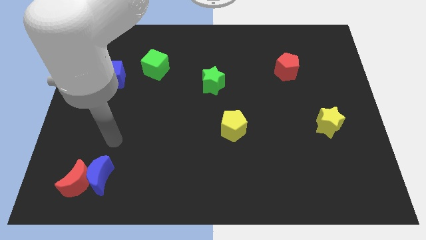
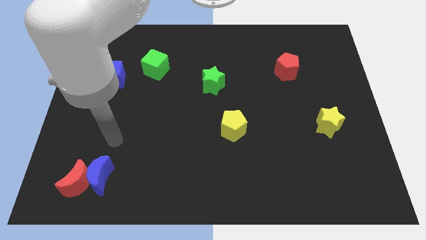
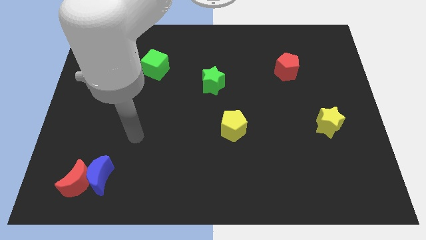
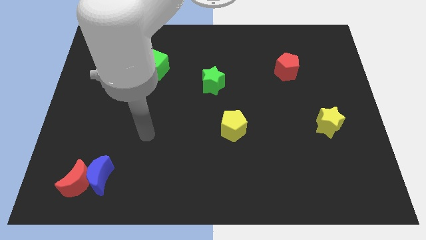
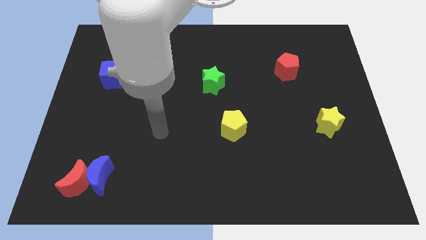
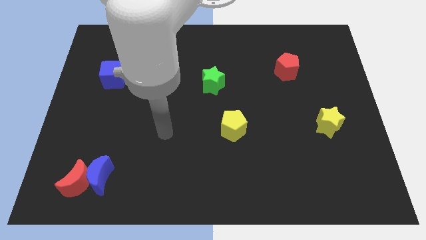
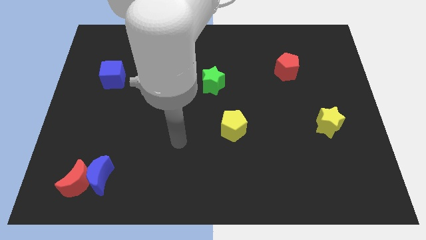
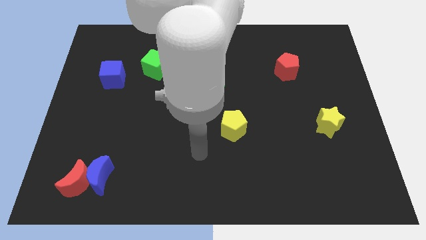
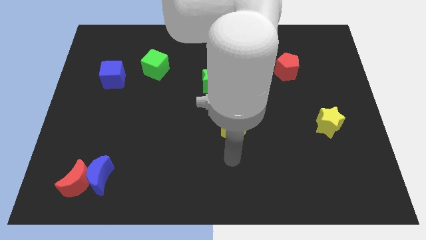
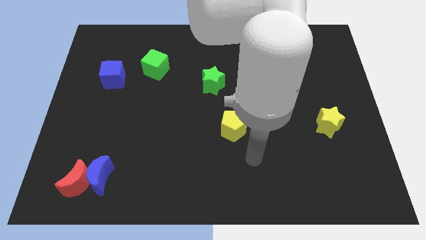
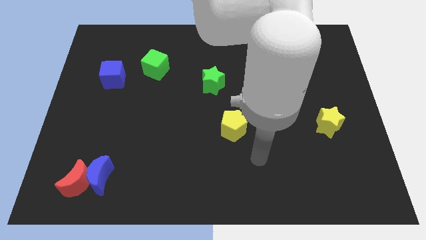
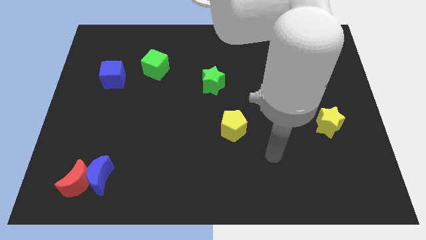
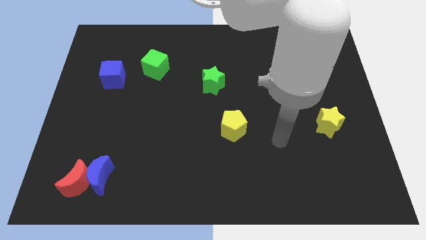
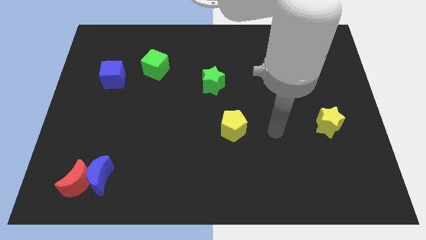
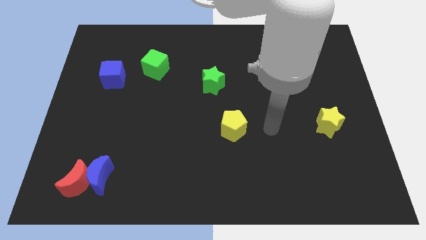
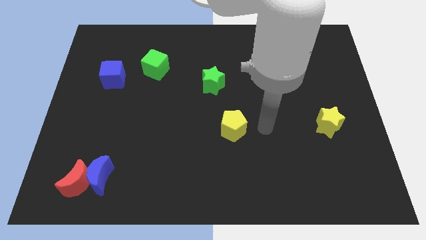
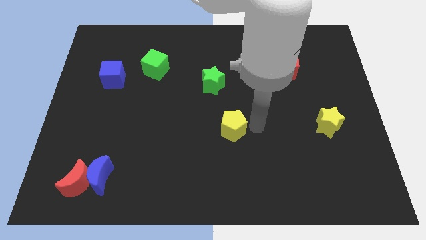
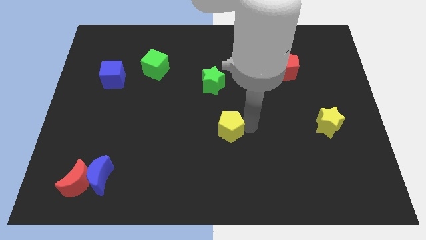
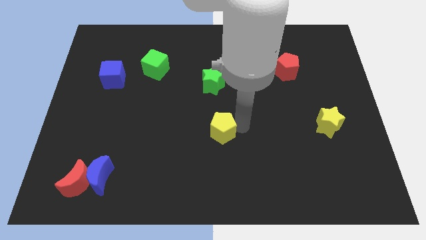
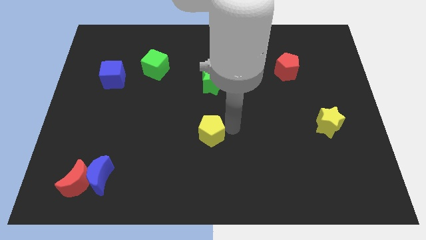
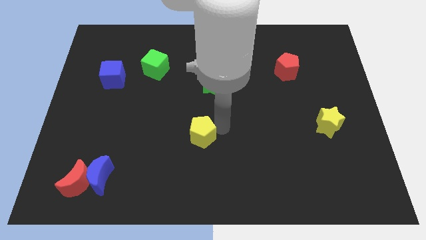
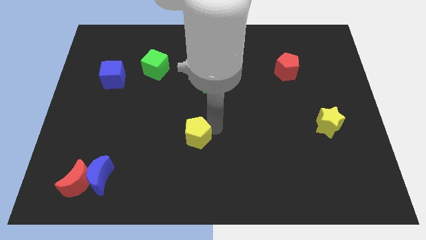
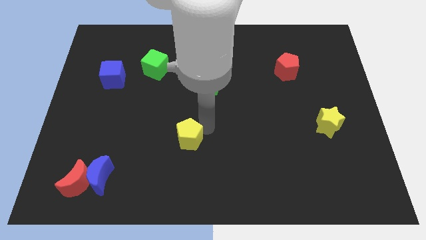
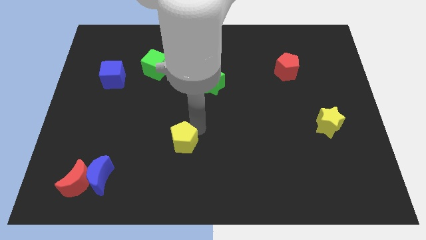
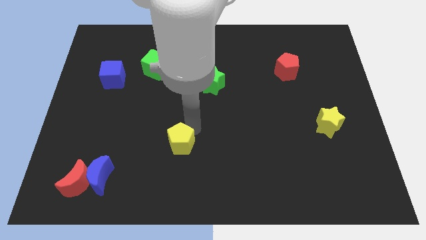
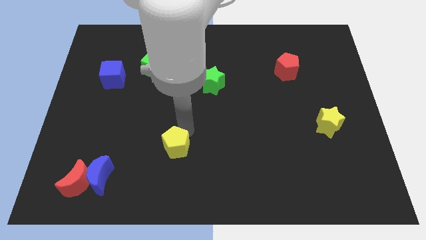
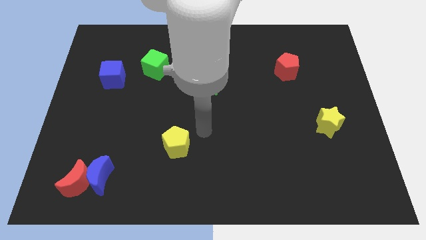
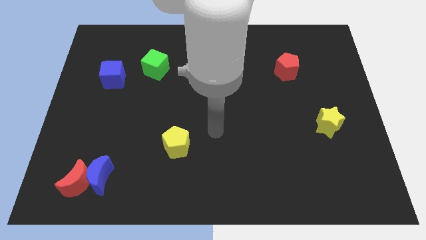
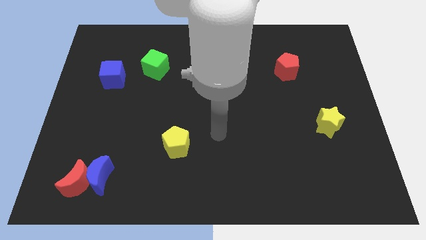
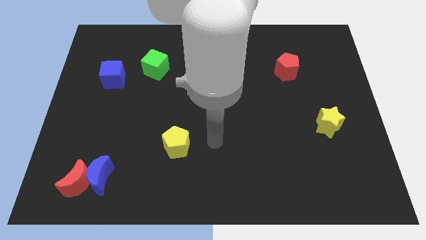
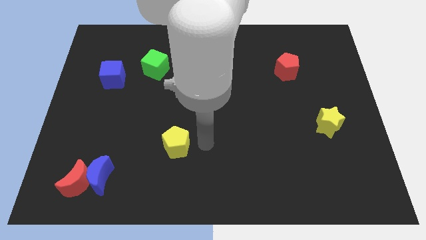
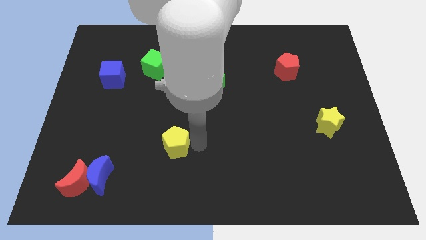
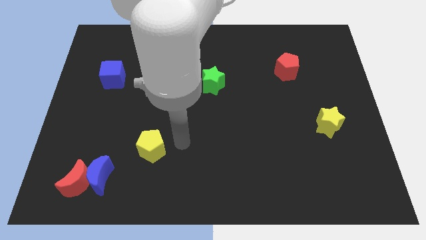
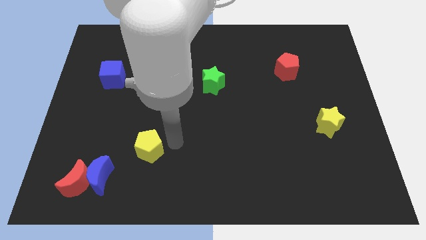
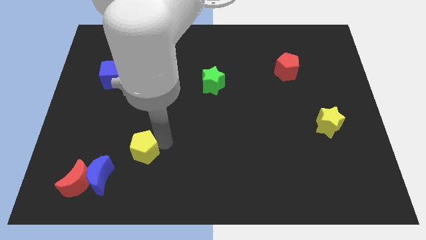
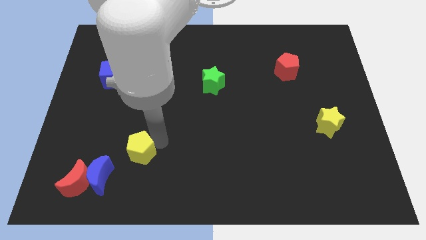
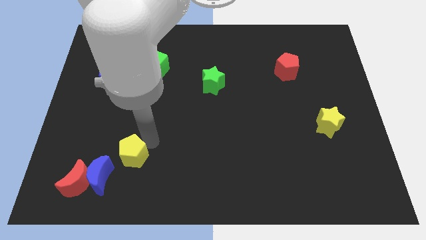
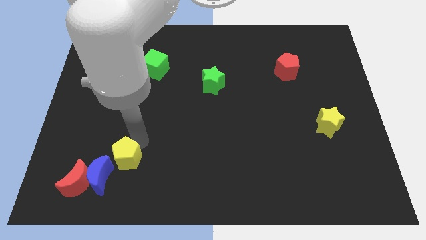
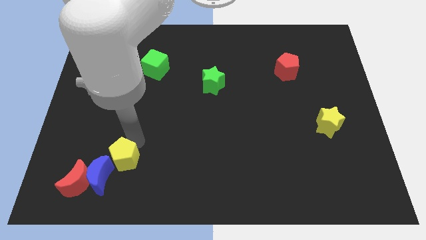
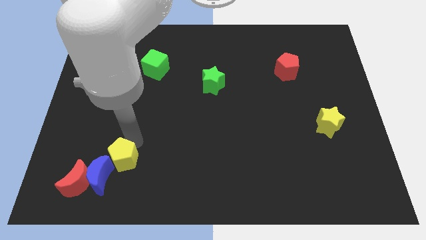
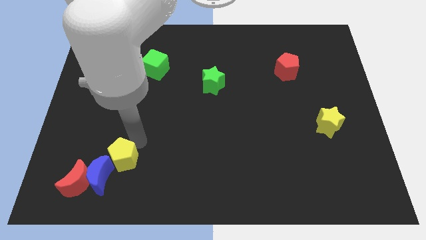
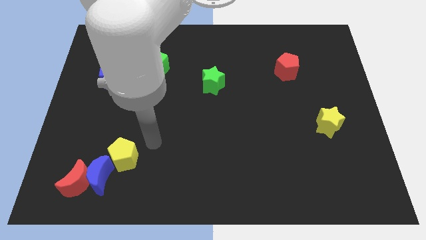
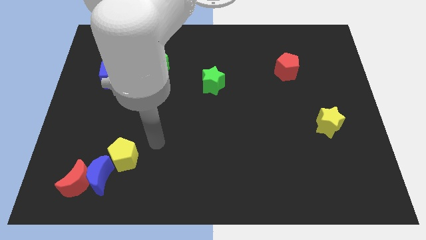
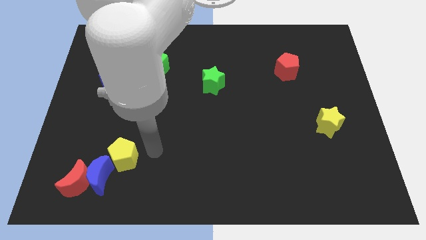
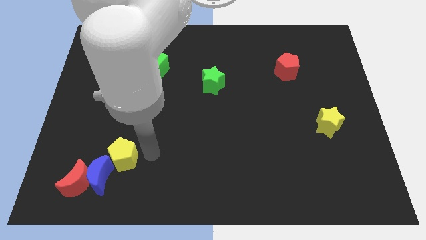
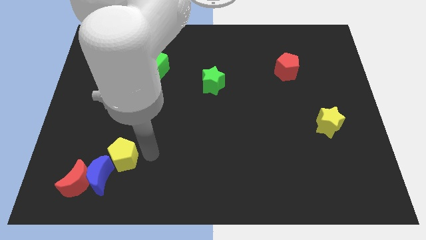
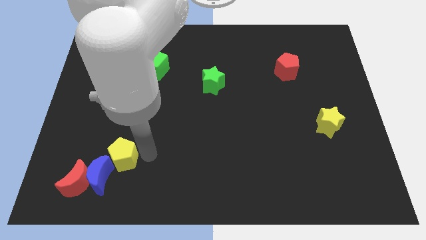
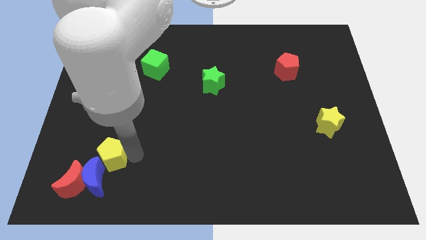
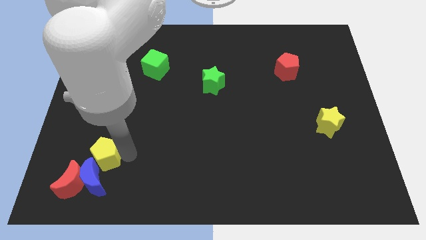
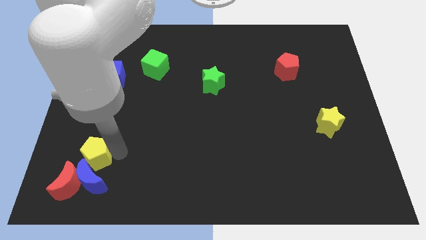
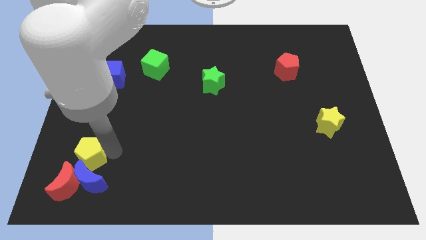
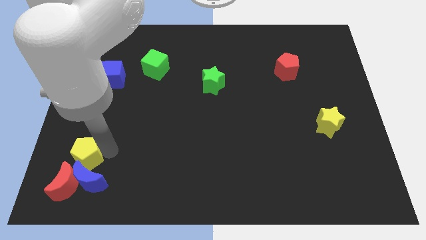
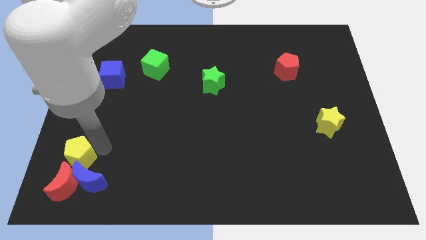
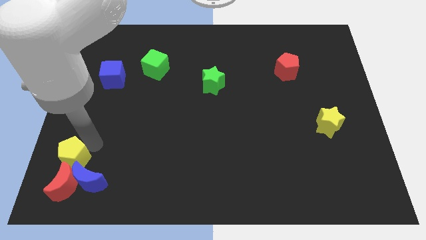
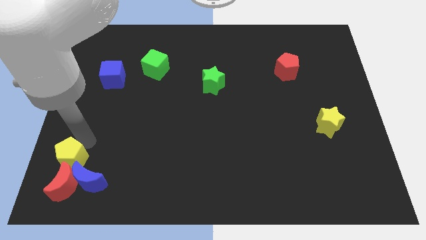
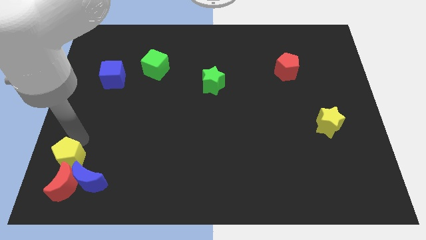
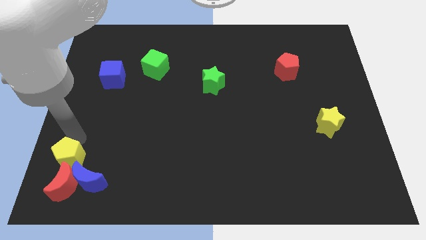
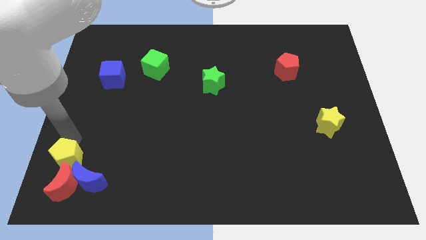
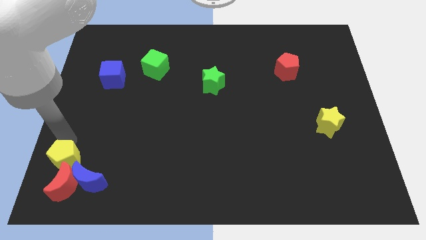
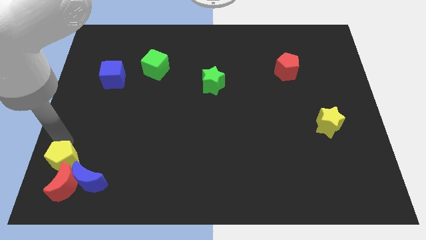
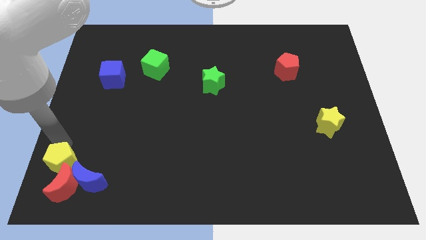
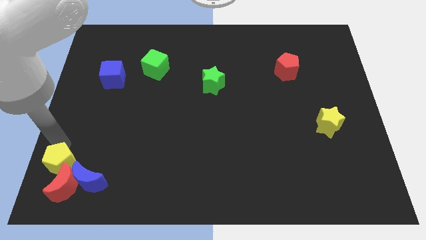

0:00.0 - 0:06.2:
move the yellow pentagon close to the red moon

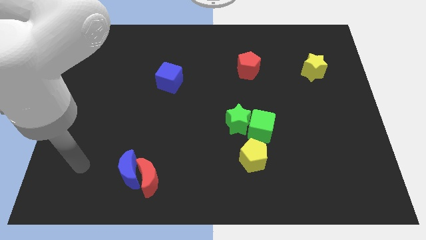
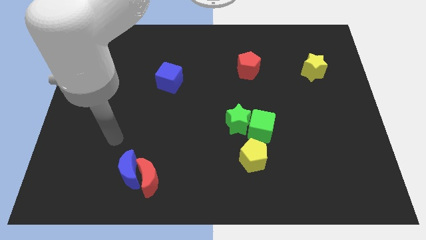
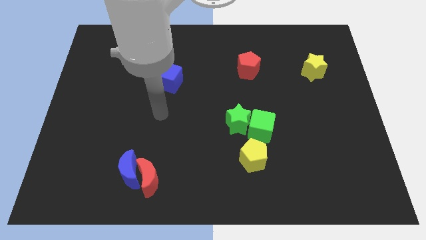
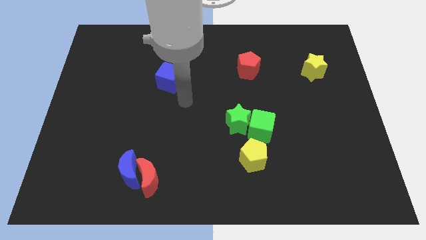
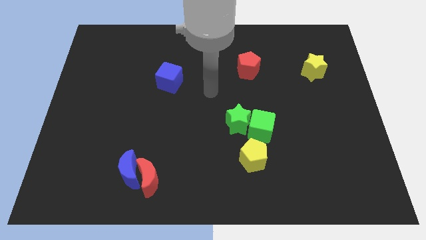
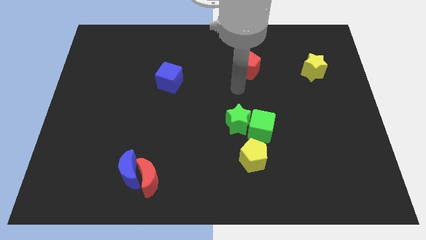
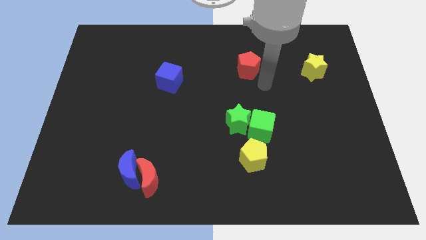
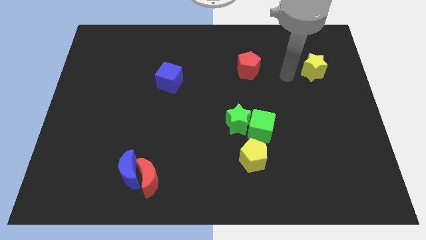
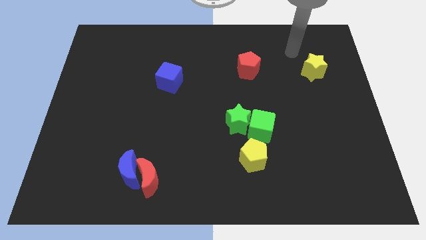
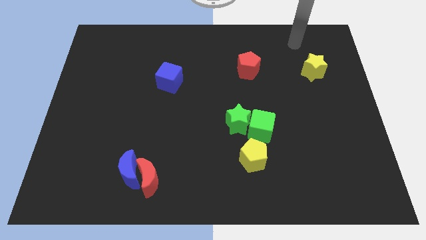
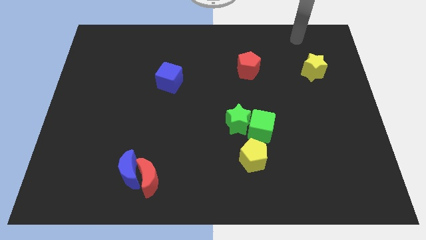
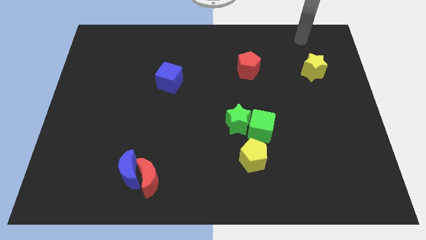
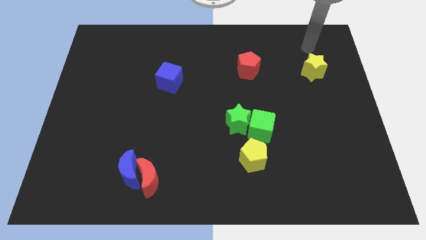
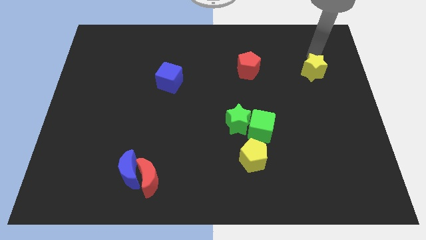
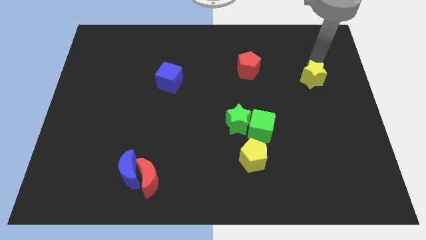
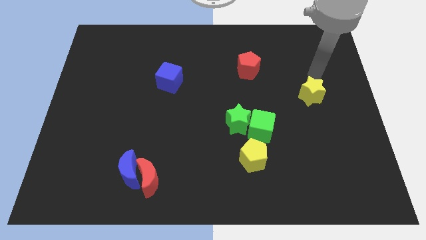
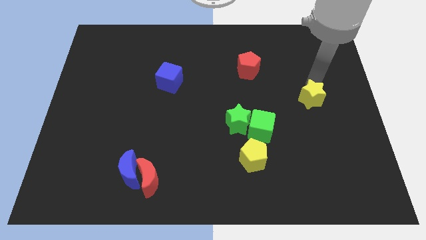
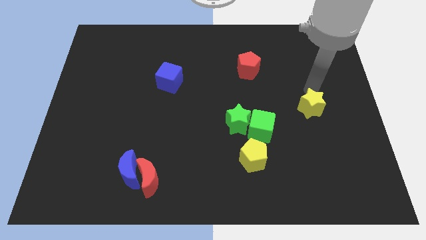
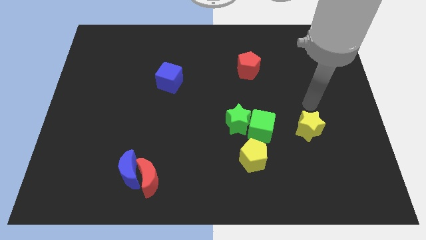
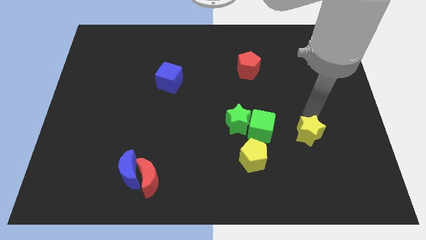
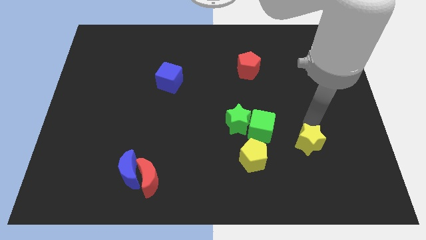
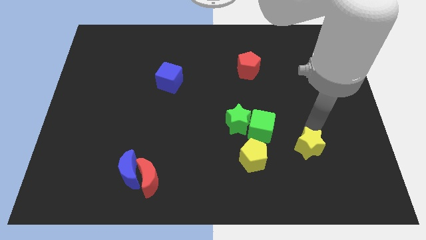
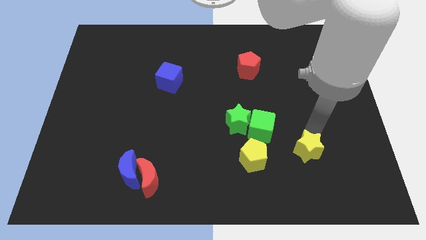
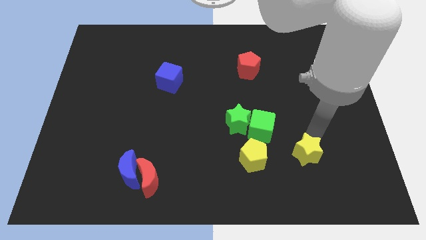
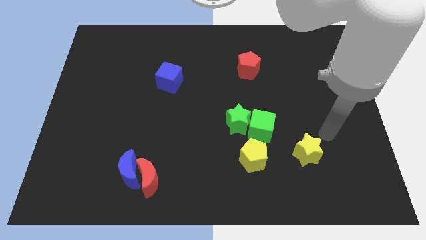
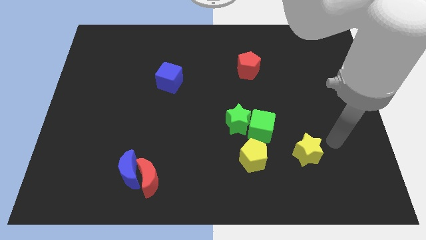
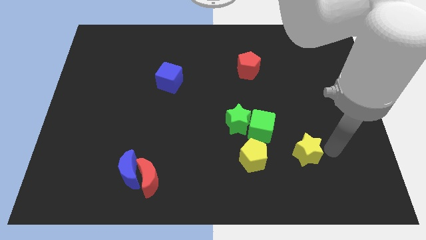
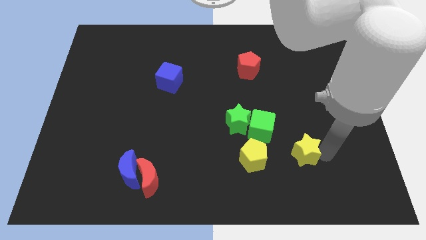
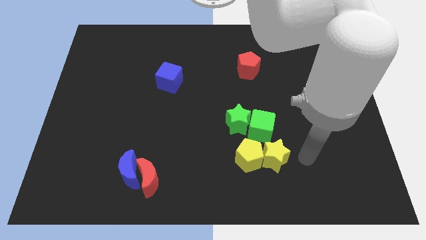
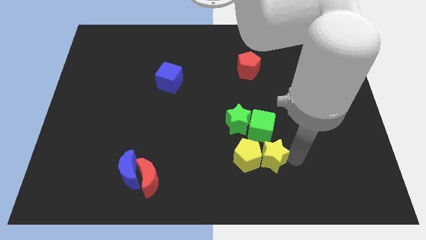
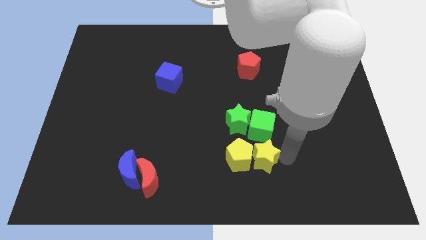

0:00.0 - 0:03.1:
move the yellow star towards the yellow pentagon
